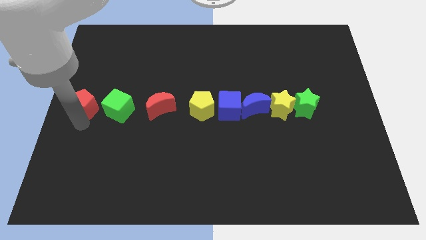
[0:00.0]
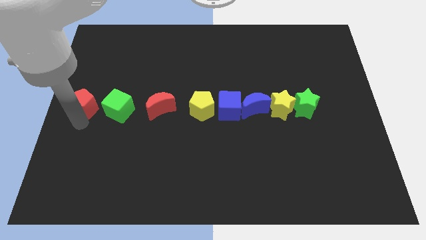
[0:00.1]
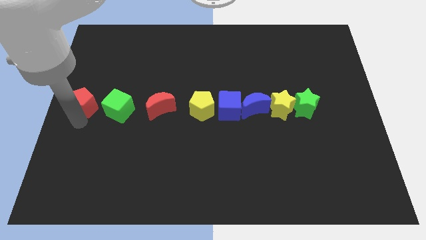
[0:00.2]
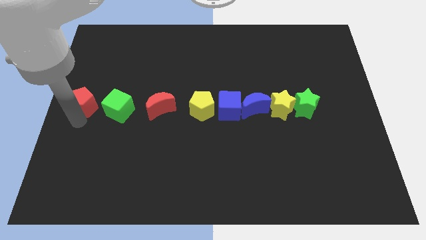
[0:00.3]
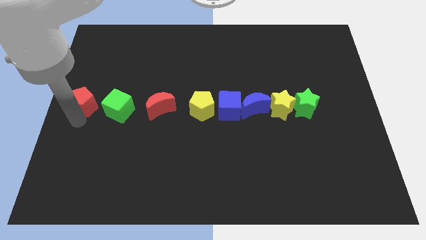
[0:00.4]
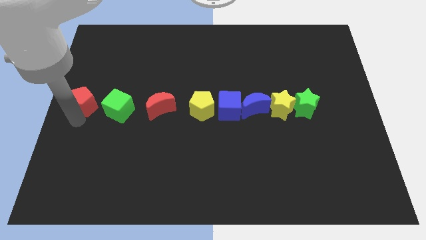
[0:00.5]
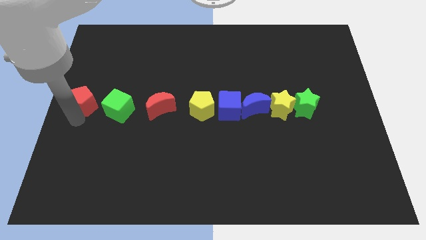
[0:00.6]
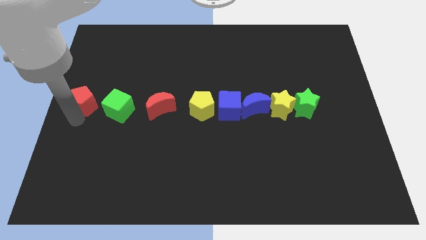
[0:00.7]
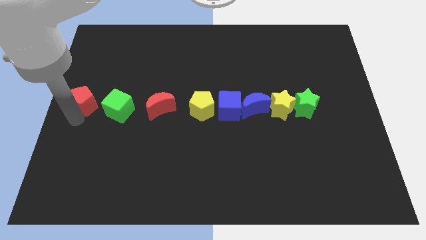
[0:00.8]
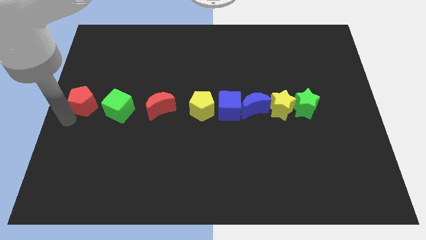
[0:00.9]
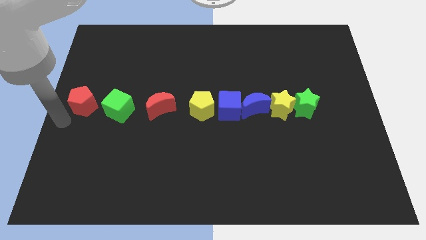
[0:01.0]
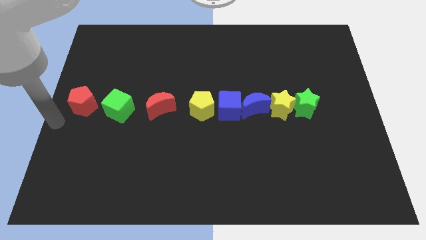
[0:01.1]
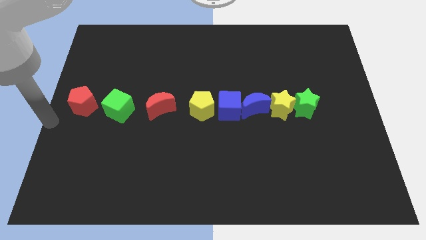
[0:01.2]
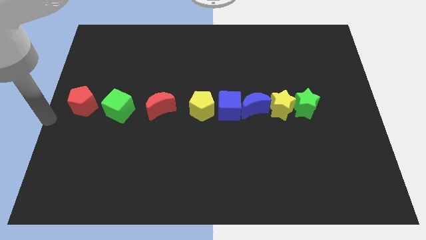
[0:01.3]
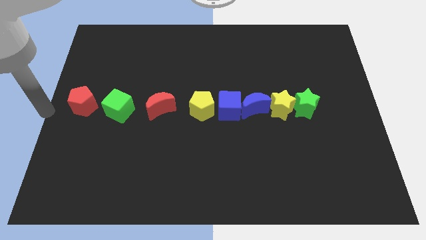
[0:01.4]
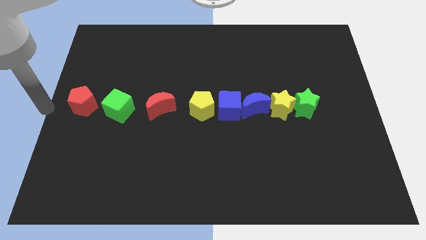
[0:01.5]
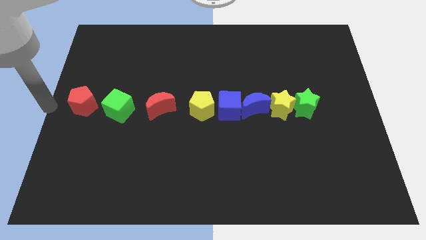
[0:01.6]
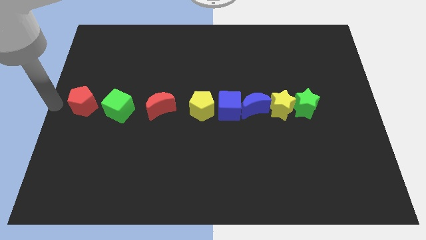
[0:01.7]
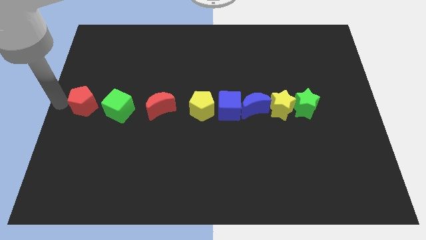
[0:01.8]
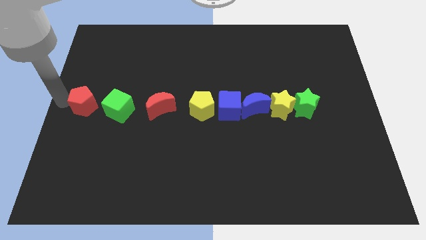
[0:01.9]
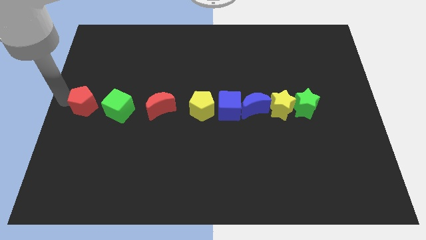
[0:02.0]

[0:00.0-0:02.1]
place the red pentagon beside the green cube

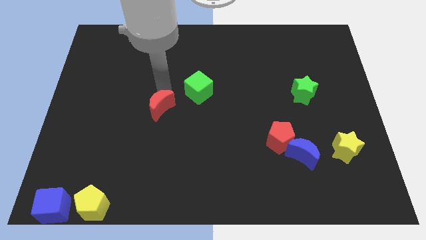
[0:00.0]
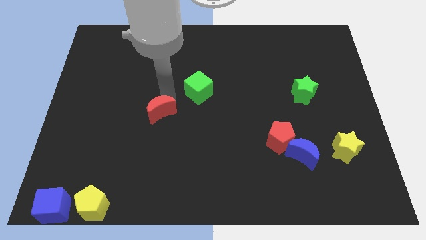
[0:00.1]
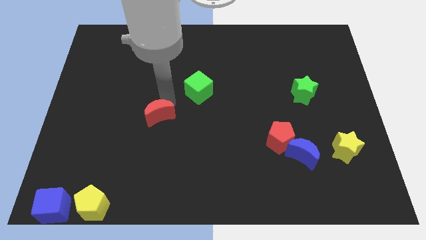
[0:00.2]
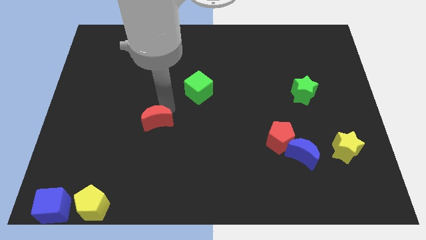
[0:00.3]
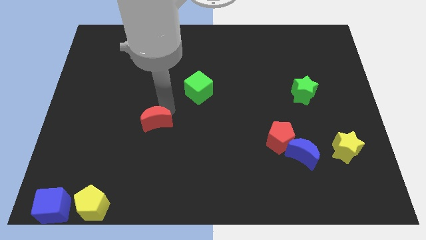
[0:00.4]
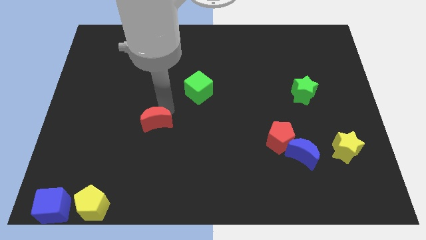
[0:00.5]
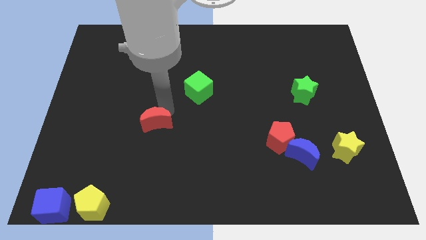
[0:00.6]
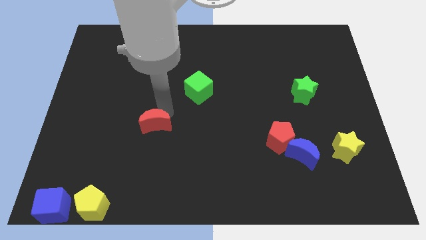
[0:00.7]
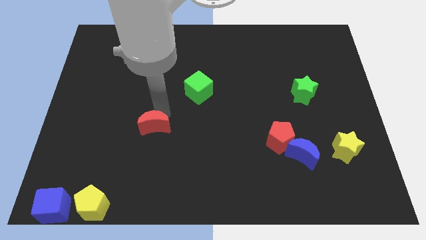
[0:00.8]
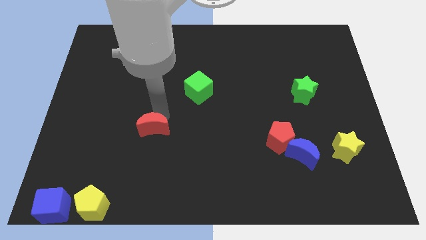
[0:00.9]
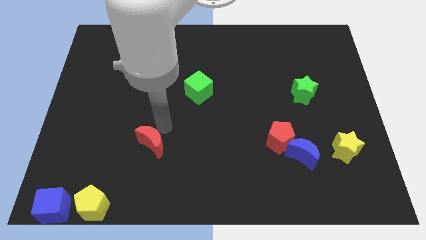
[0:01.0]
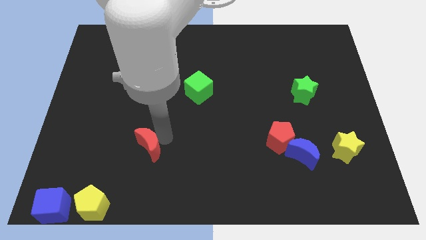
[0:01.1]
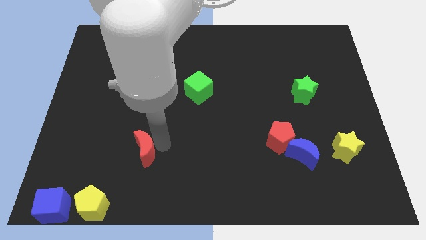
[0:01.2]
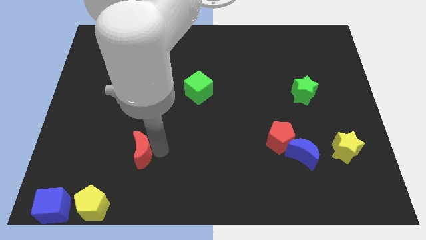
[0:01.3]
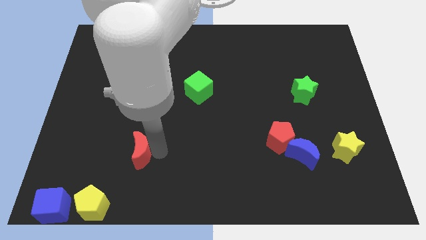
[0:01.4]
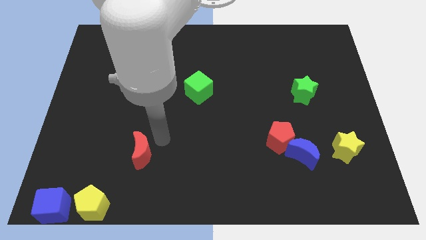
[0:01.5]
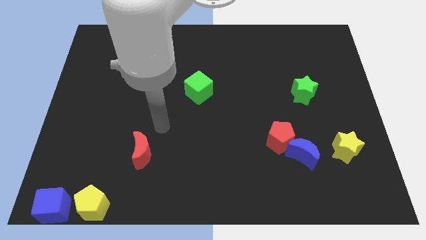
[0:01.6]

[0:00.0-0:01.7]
move the red moon towards bottom

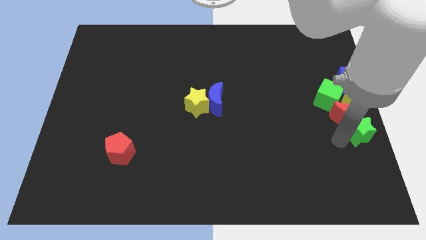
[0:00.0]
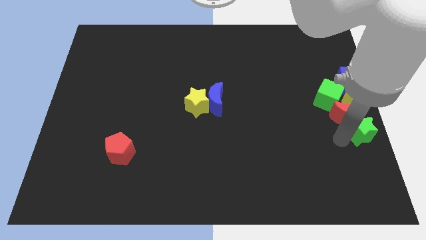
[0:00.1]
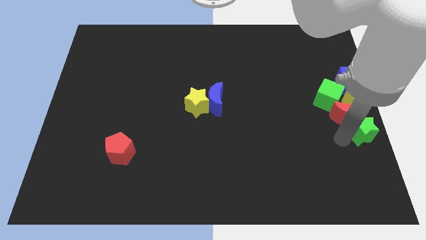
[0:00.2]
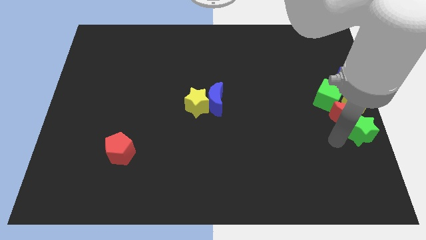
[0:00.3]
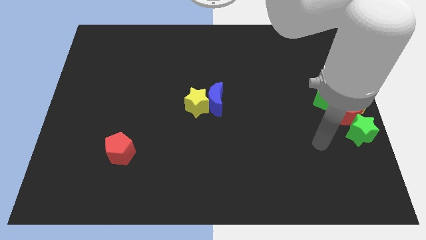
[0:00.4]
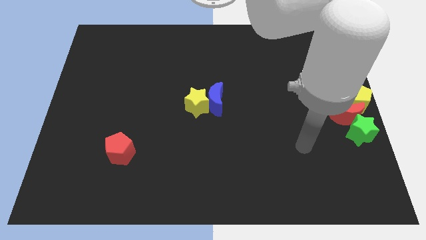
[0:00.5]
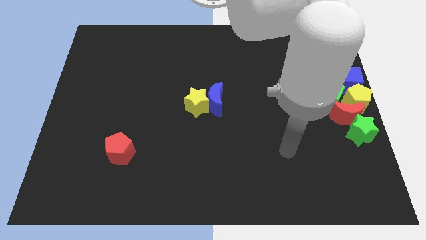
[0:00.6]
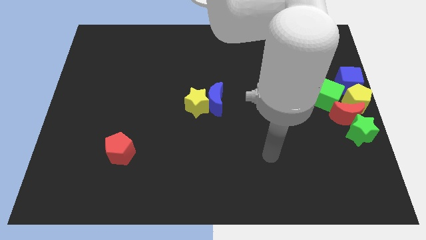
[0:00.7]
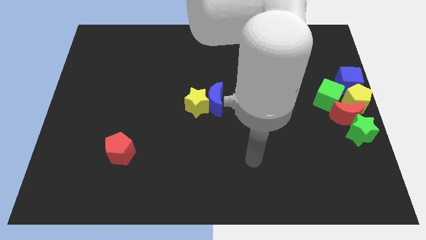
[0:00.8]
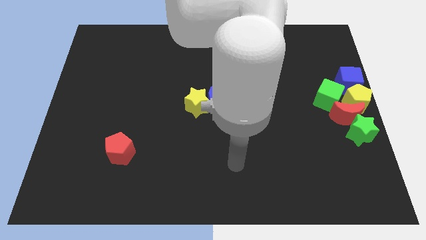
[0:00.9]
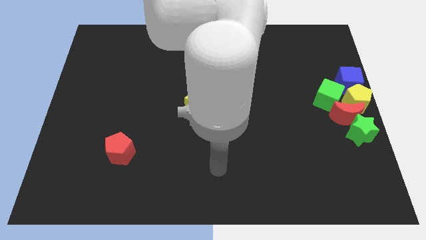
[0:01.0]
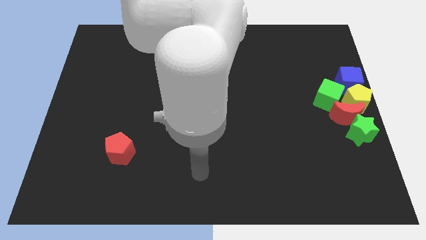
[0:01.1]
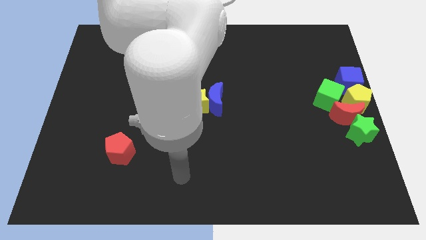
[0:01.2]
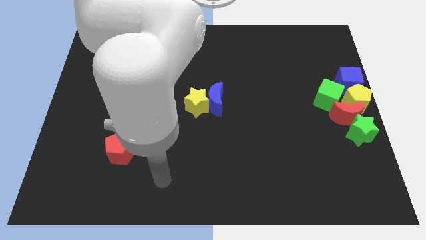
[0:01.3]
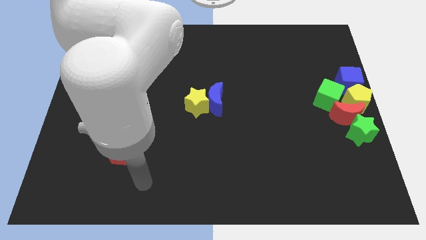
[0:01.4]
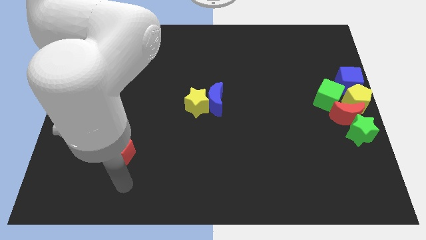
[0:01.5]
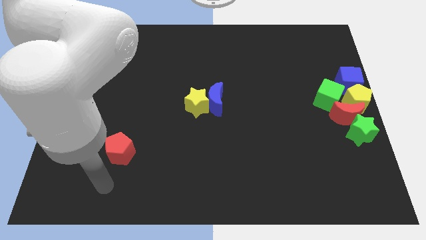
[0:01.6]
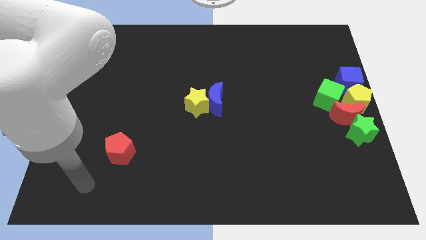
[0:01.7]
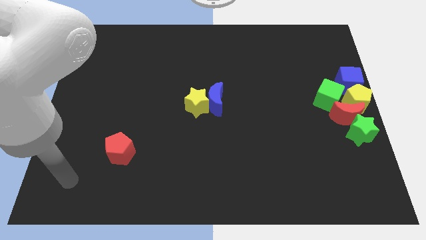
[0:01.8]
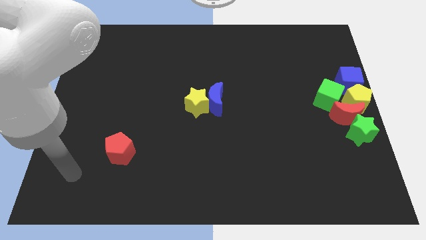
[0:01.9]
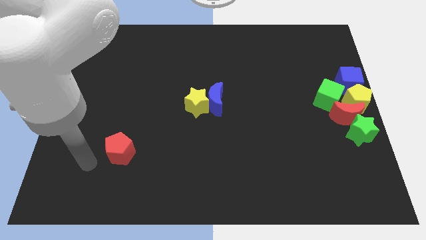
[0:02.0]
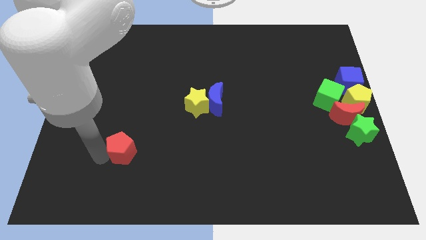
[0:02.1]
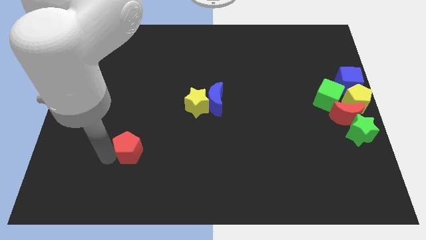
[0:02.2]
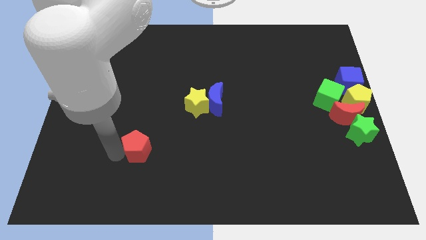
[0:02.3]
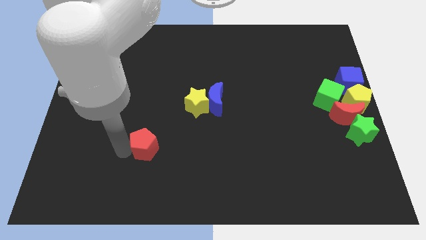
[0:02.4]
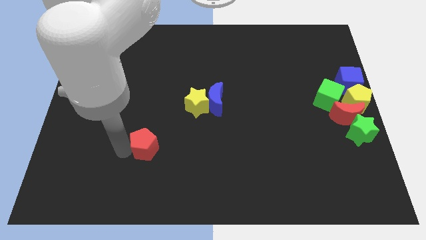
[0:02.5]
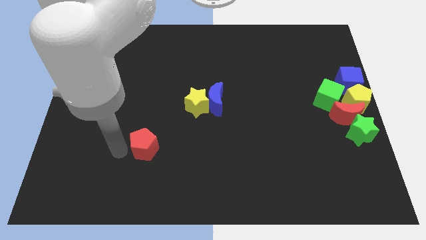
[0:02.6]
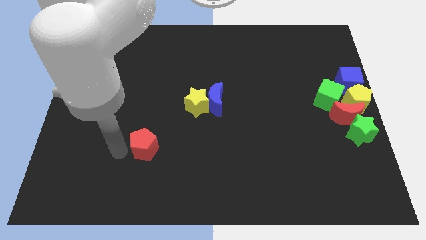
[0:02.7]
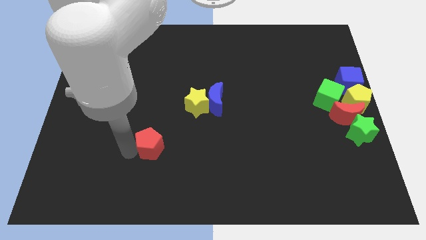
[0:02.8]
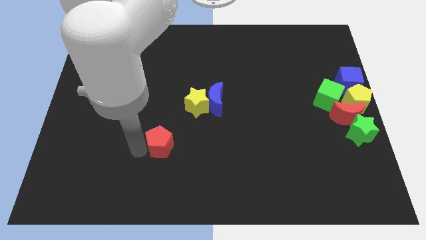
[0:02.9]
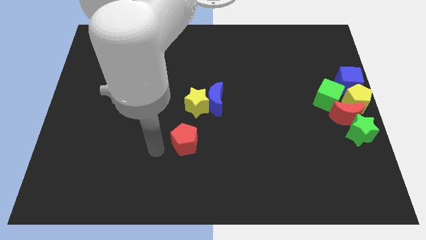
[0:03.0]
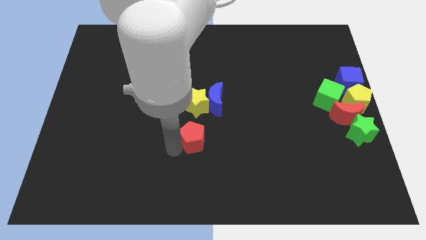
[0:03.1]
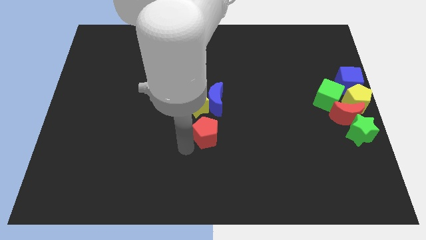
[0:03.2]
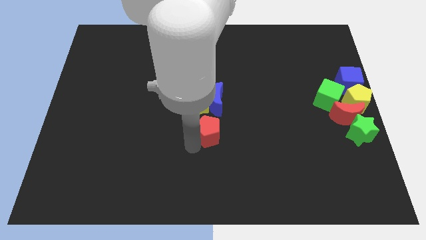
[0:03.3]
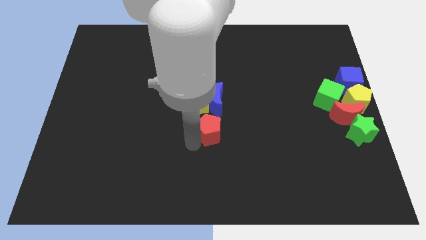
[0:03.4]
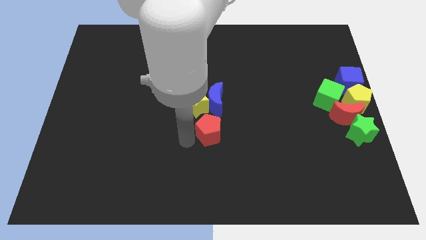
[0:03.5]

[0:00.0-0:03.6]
push the red pentagon diagonally below the yellow star and blue crescent

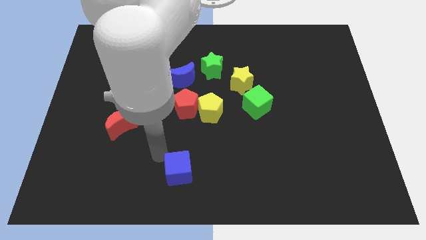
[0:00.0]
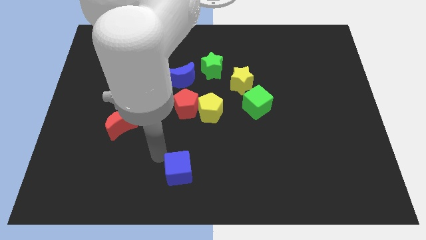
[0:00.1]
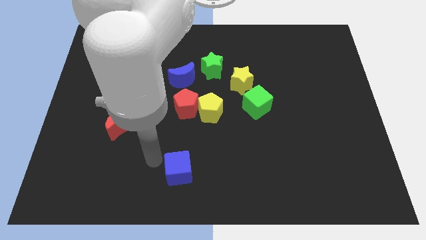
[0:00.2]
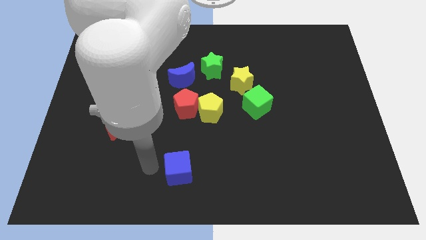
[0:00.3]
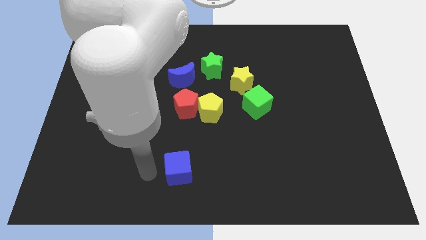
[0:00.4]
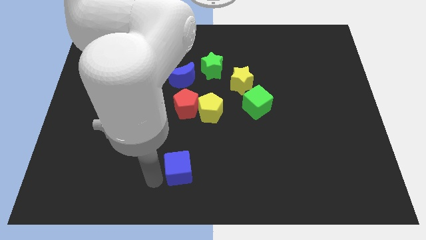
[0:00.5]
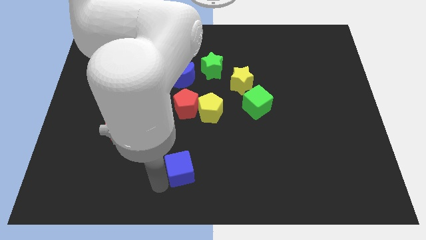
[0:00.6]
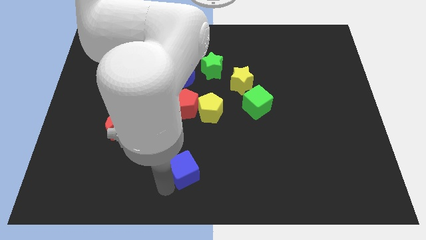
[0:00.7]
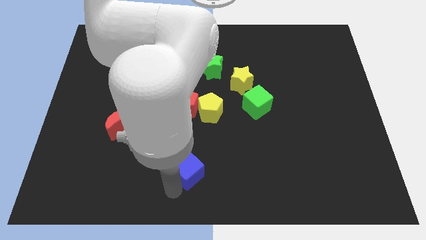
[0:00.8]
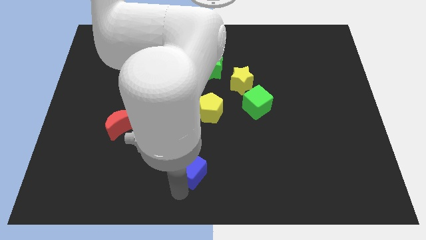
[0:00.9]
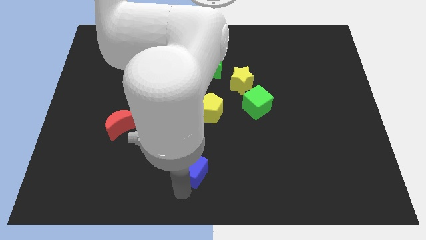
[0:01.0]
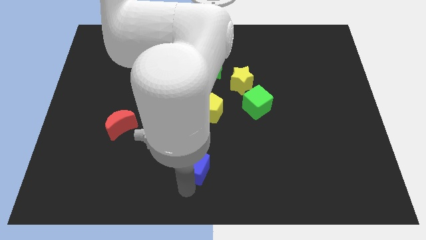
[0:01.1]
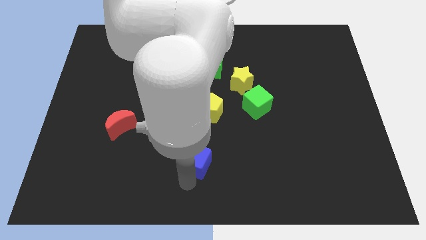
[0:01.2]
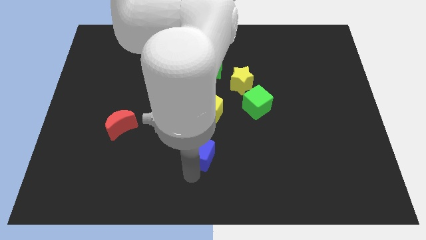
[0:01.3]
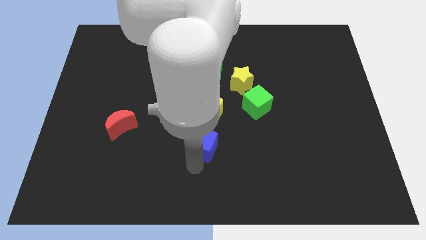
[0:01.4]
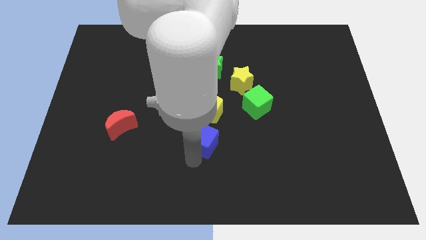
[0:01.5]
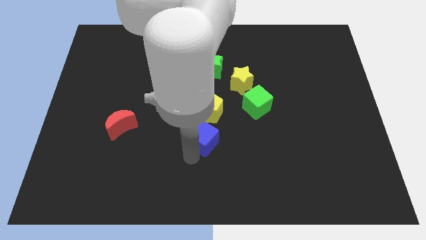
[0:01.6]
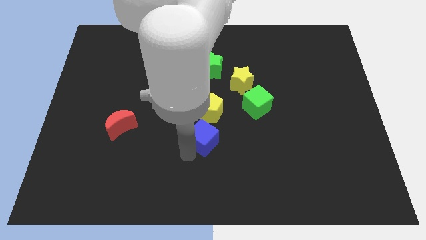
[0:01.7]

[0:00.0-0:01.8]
move blue cube below yellow pentagon
